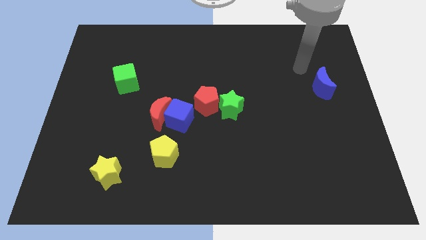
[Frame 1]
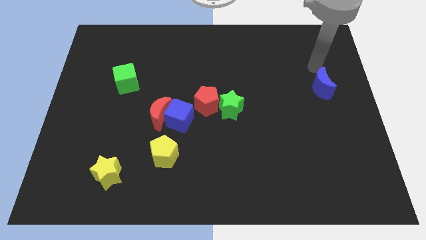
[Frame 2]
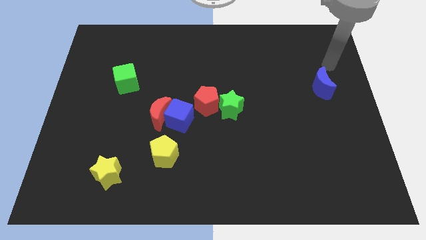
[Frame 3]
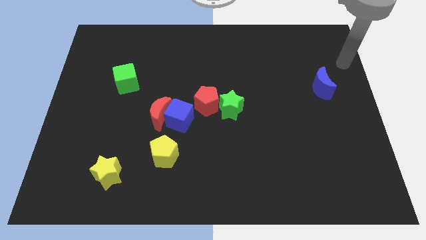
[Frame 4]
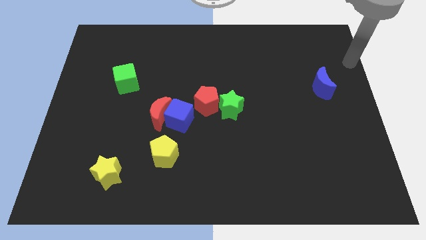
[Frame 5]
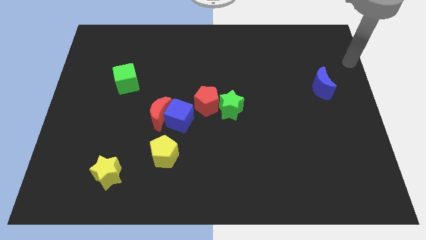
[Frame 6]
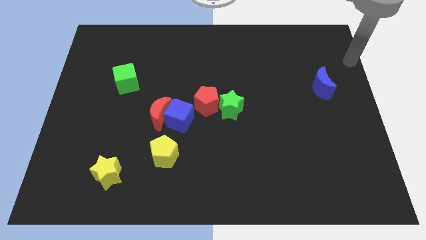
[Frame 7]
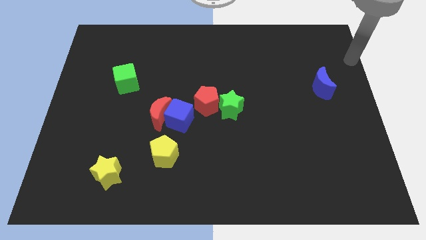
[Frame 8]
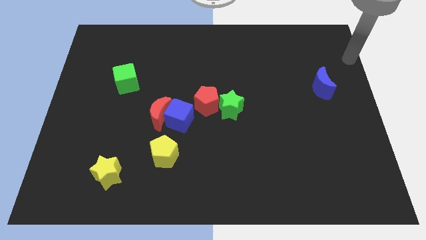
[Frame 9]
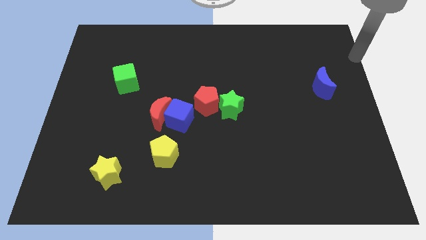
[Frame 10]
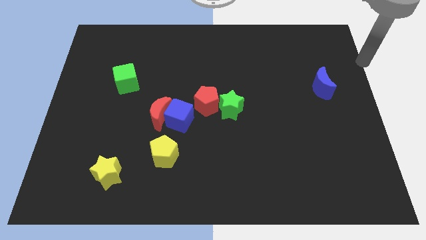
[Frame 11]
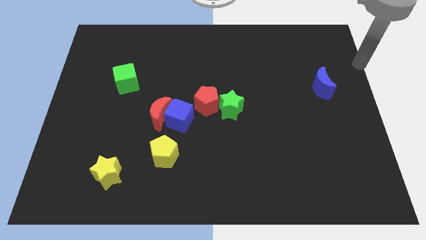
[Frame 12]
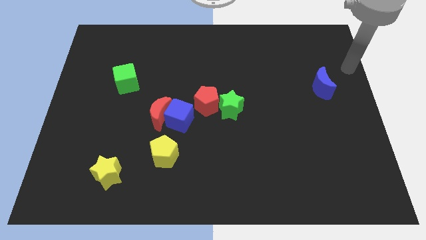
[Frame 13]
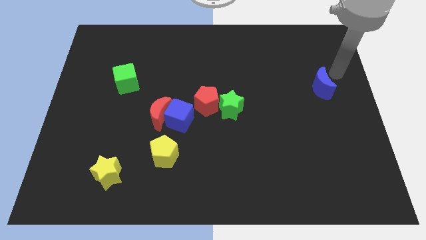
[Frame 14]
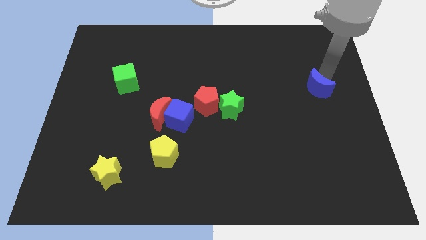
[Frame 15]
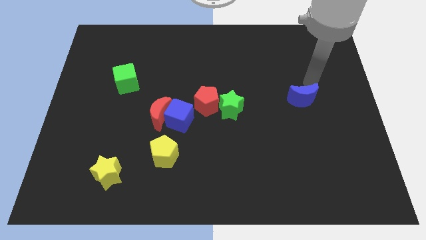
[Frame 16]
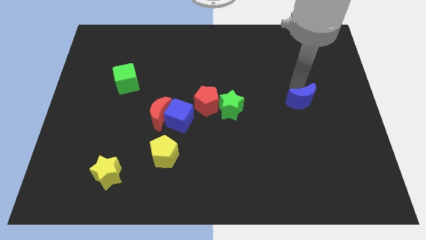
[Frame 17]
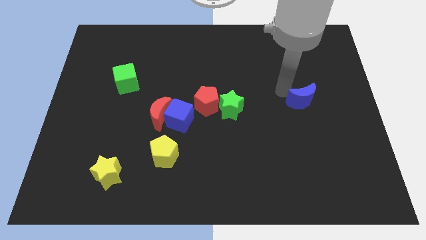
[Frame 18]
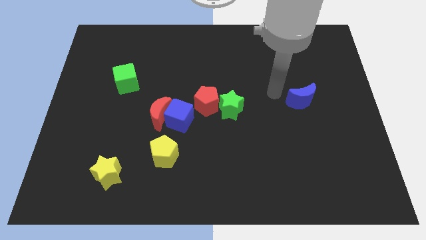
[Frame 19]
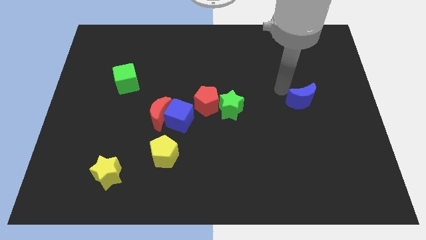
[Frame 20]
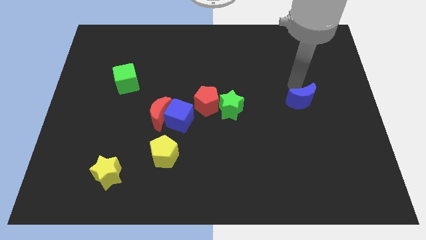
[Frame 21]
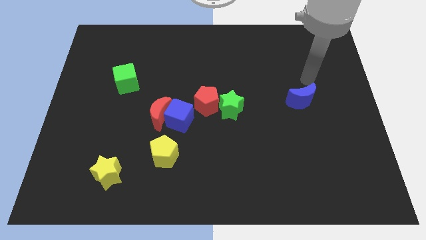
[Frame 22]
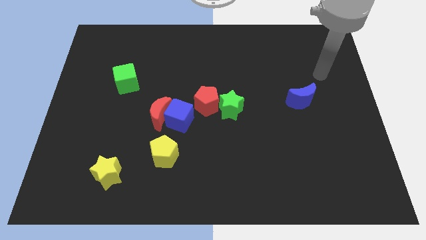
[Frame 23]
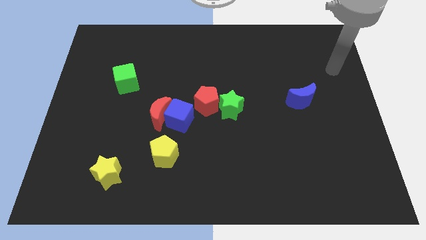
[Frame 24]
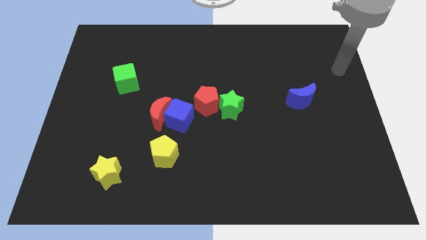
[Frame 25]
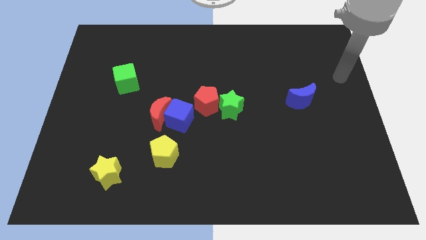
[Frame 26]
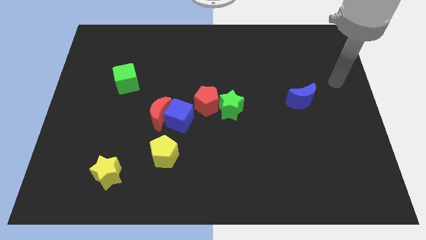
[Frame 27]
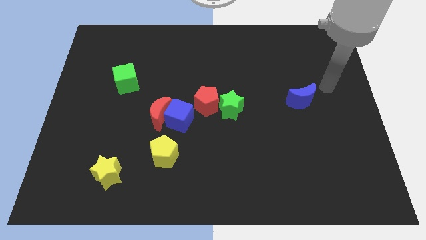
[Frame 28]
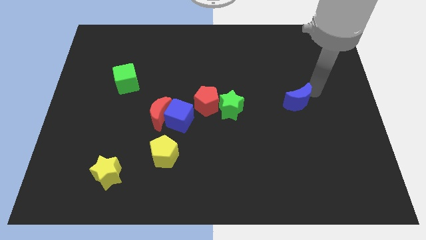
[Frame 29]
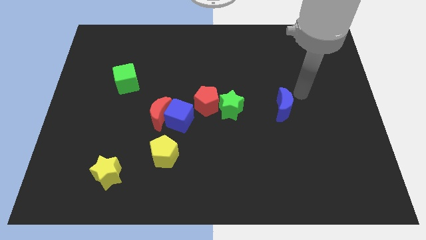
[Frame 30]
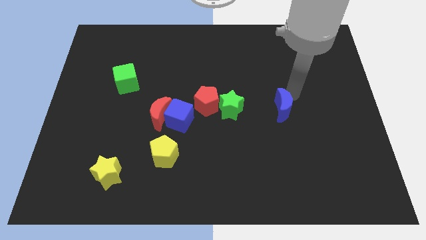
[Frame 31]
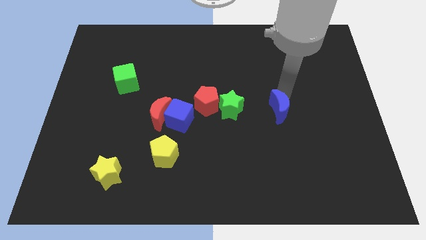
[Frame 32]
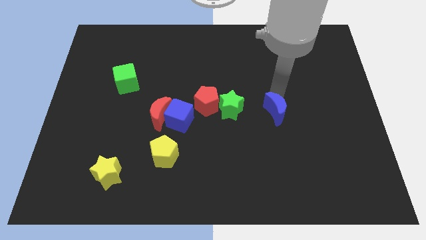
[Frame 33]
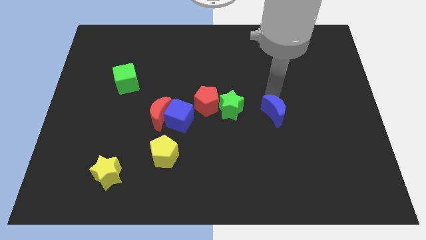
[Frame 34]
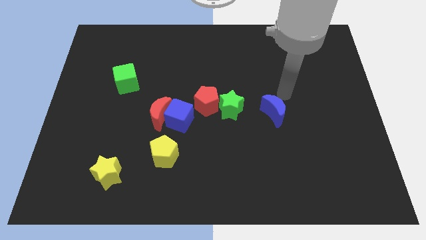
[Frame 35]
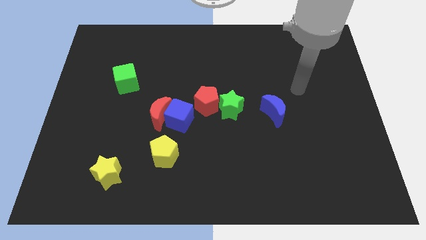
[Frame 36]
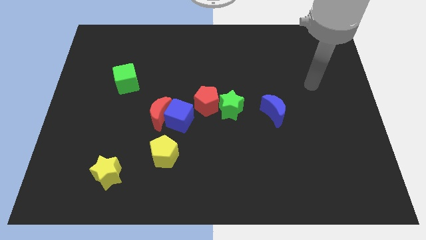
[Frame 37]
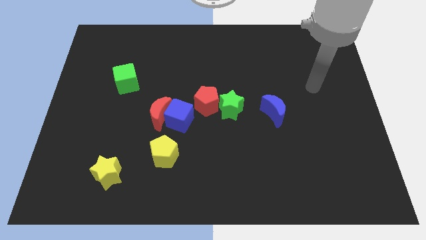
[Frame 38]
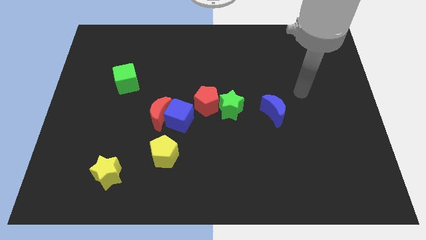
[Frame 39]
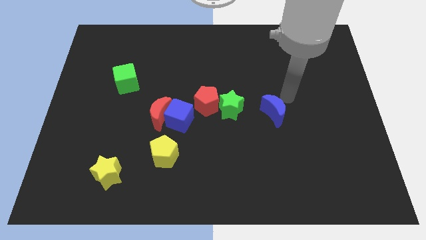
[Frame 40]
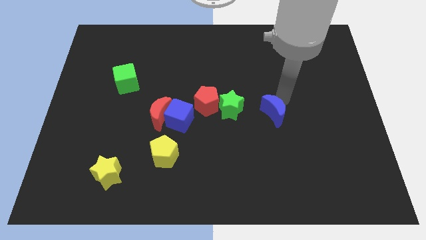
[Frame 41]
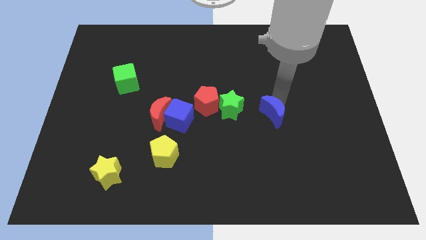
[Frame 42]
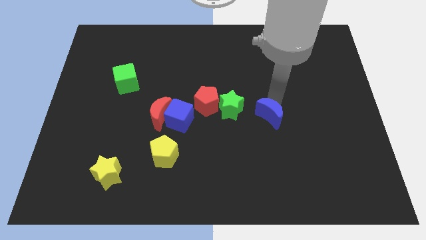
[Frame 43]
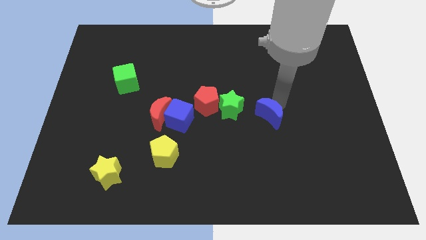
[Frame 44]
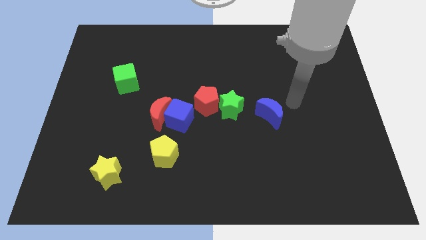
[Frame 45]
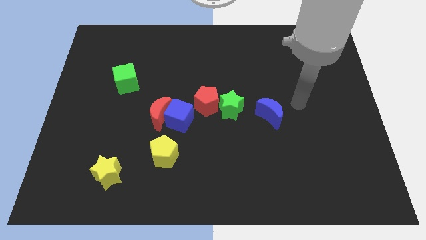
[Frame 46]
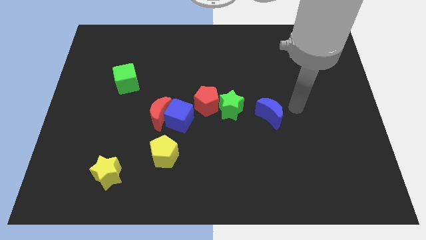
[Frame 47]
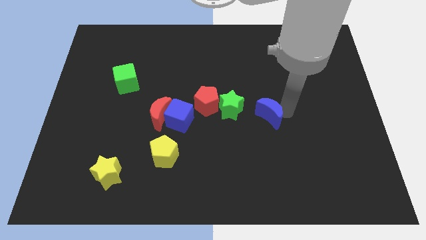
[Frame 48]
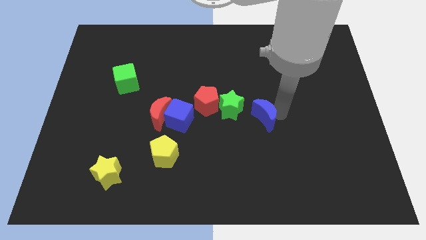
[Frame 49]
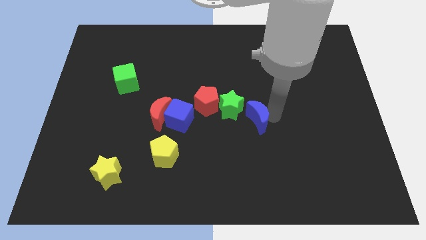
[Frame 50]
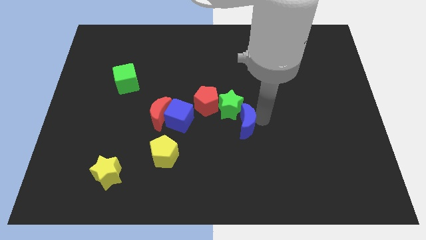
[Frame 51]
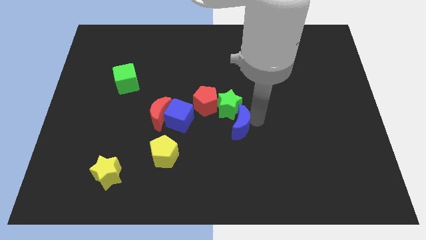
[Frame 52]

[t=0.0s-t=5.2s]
push the blue crescent to the bottom right of the green star

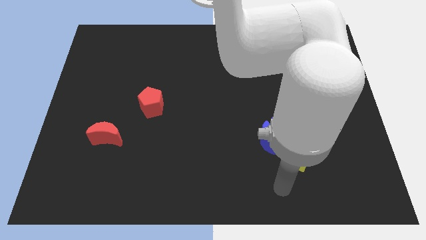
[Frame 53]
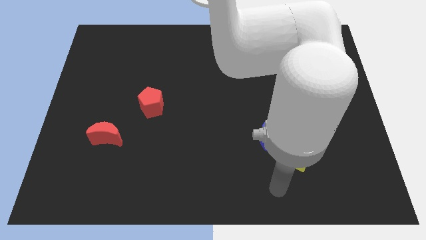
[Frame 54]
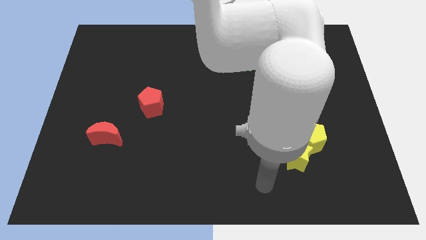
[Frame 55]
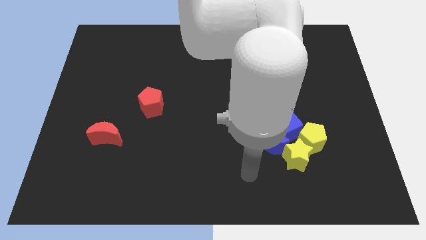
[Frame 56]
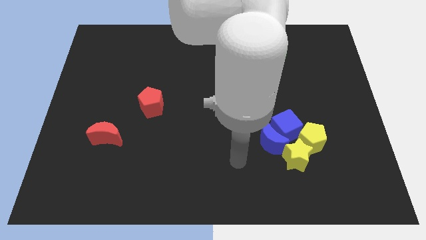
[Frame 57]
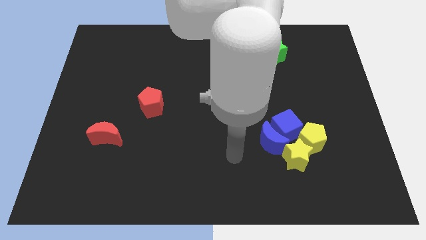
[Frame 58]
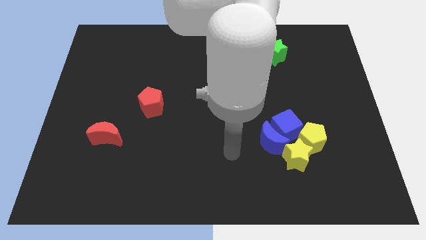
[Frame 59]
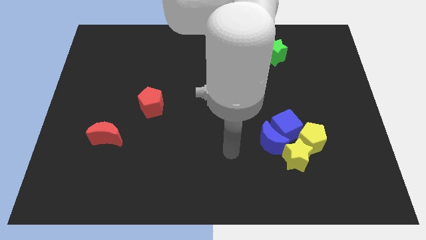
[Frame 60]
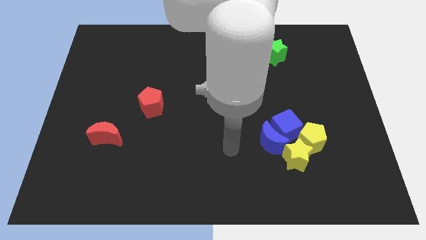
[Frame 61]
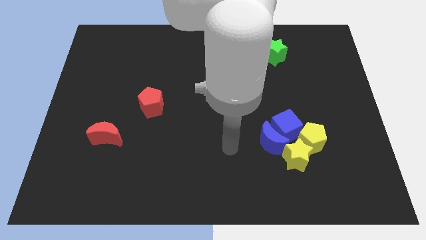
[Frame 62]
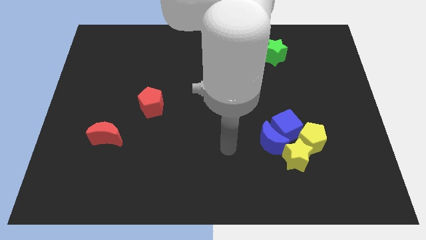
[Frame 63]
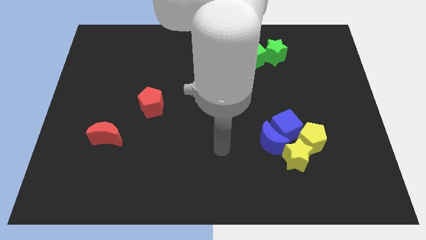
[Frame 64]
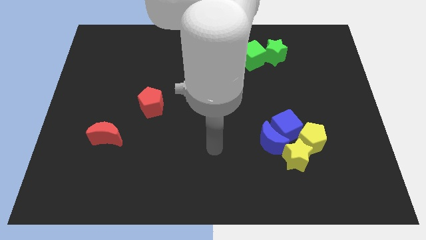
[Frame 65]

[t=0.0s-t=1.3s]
move your hand towards the center

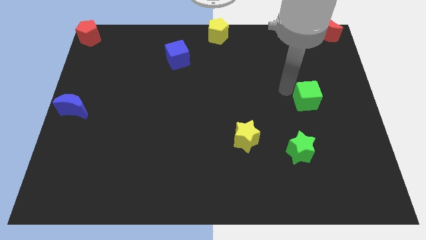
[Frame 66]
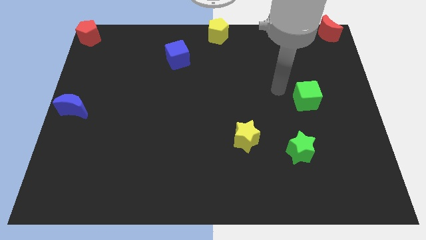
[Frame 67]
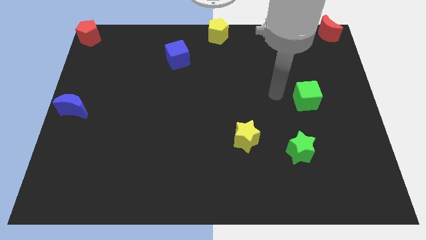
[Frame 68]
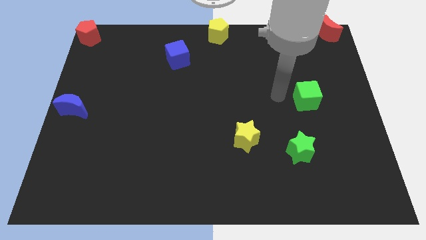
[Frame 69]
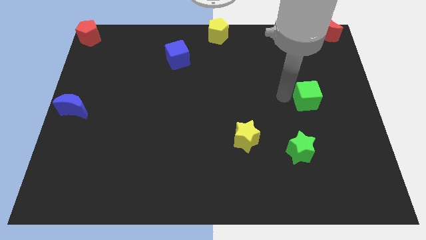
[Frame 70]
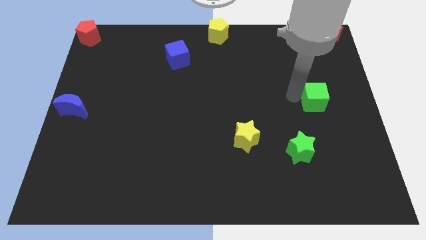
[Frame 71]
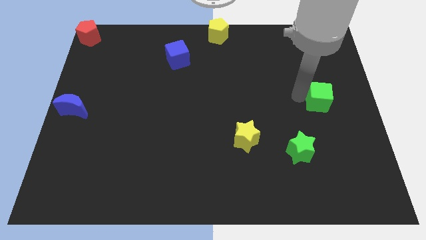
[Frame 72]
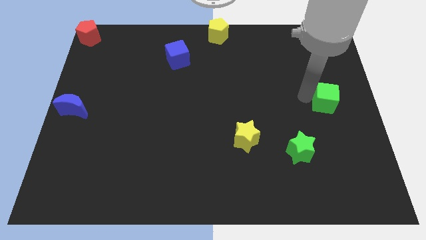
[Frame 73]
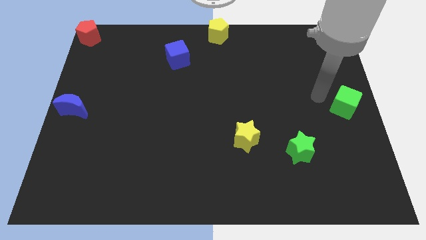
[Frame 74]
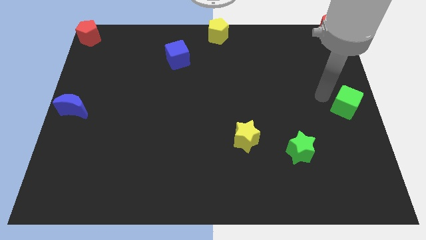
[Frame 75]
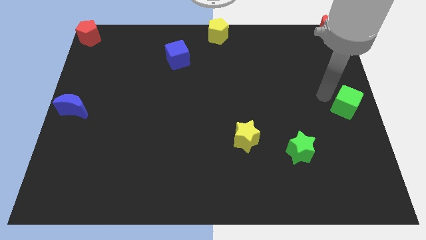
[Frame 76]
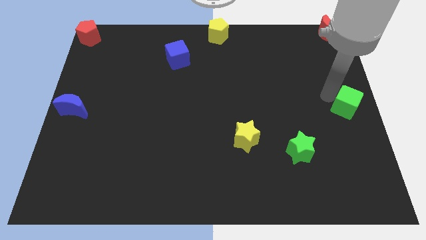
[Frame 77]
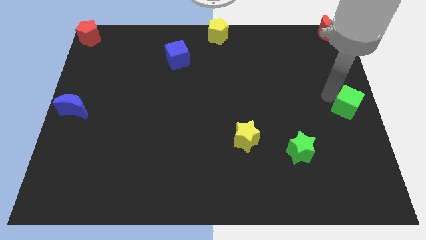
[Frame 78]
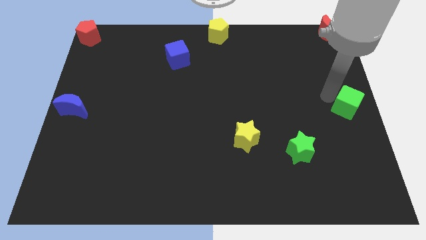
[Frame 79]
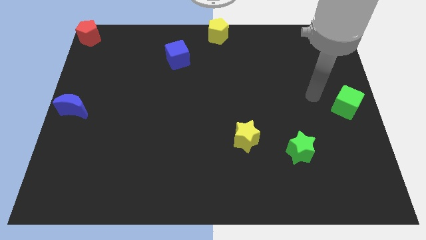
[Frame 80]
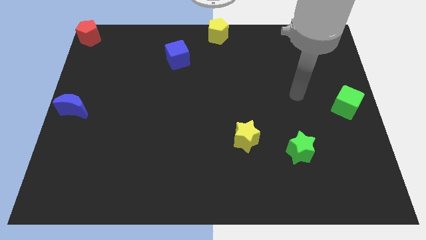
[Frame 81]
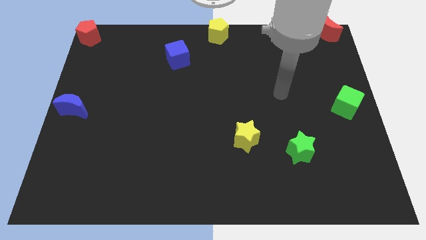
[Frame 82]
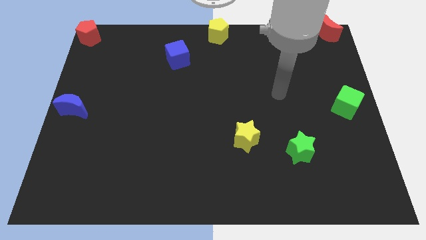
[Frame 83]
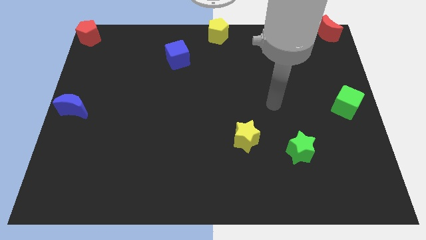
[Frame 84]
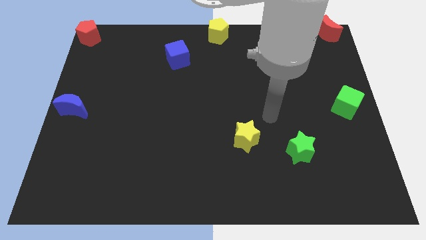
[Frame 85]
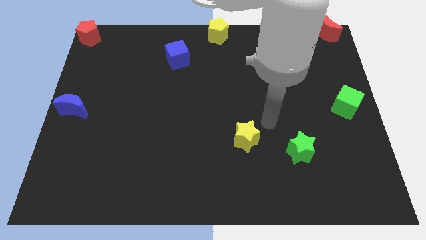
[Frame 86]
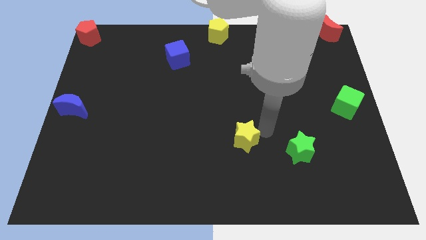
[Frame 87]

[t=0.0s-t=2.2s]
push the green cube to the right center of the board

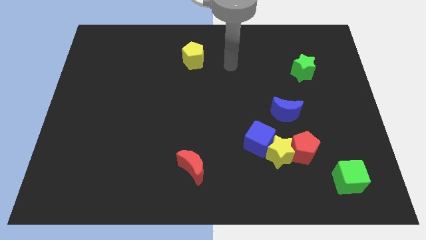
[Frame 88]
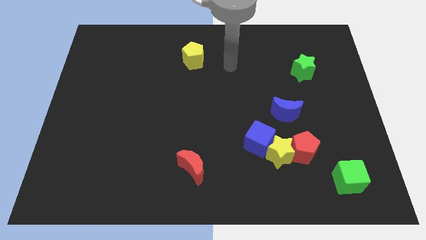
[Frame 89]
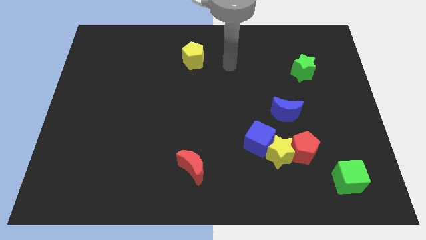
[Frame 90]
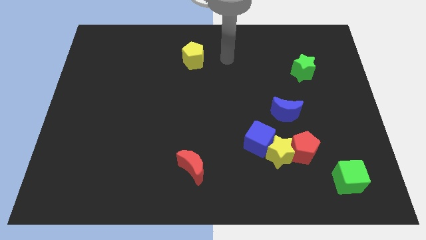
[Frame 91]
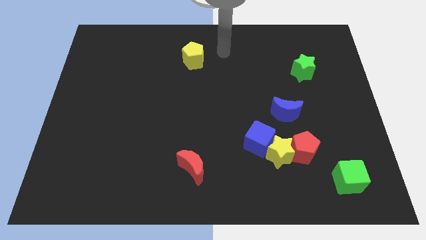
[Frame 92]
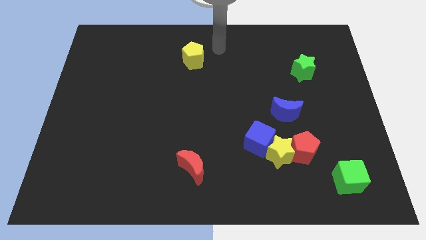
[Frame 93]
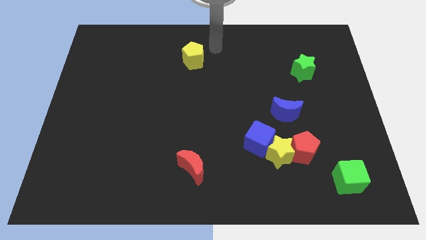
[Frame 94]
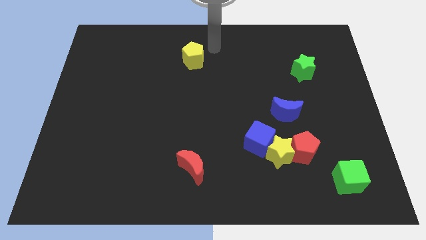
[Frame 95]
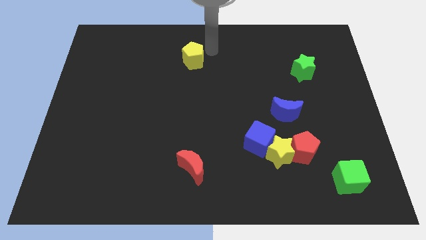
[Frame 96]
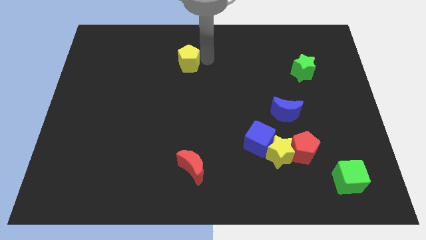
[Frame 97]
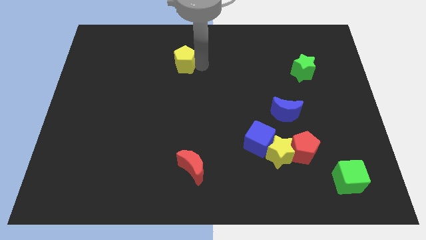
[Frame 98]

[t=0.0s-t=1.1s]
tap the yellow pentagon
